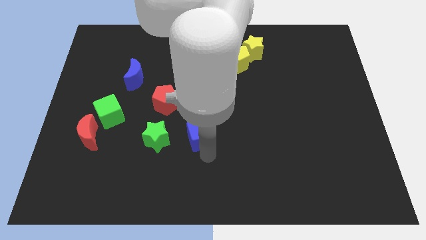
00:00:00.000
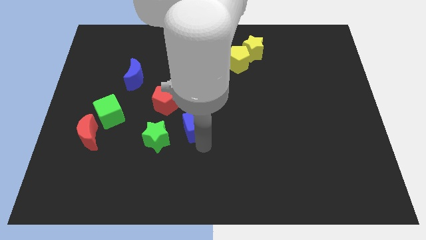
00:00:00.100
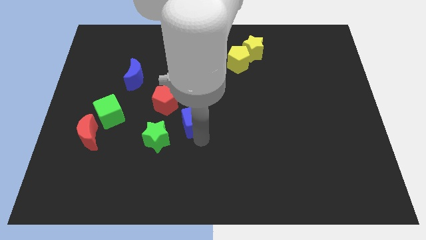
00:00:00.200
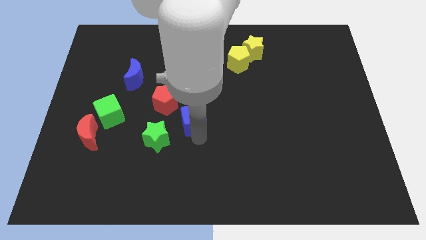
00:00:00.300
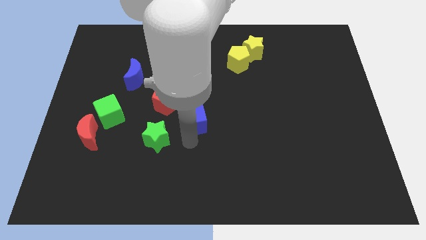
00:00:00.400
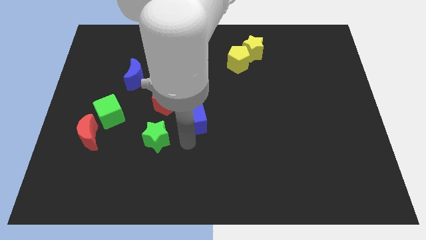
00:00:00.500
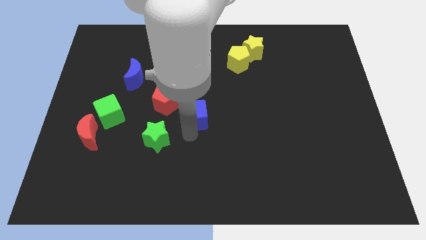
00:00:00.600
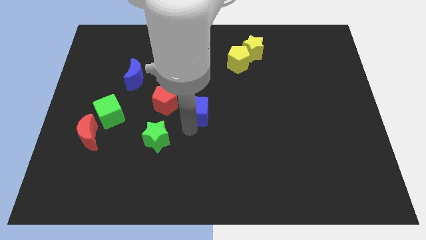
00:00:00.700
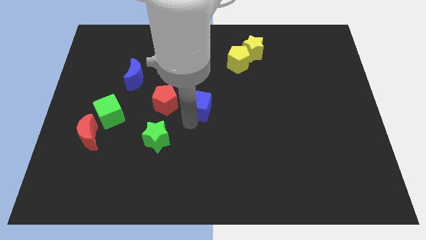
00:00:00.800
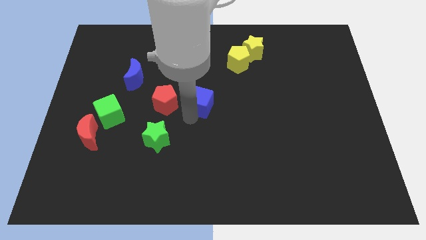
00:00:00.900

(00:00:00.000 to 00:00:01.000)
move the blue cube to the right of the red pentagon

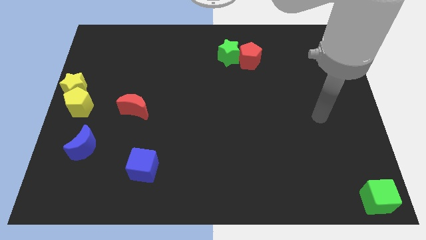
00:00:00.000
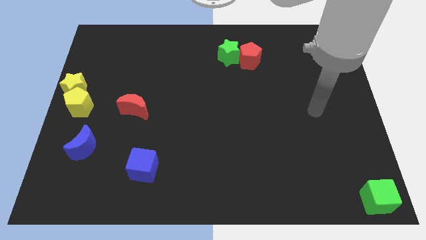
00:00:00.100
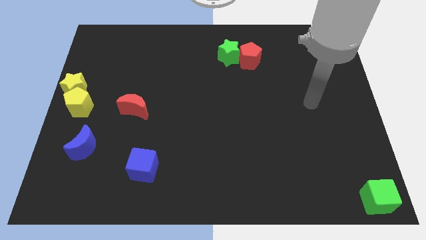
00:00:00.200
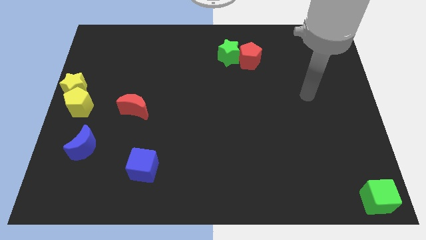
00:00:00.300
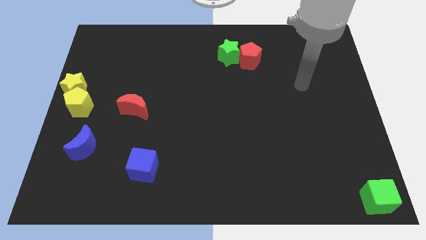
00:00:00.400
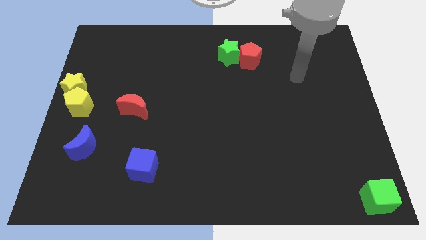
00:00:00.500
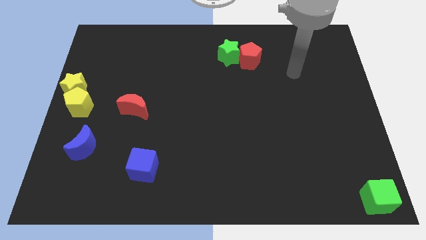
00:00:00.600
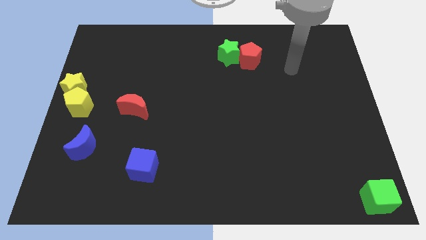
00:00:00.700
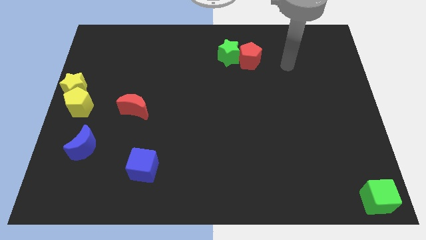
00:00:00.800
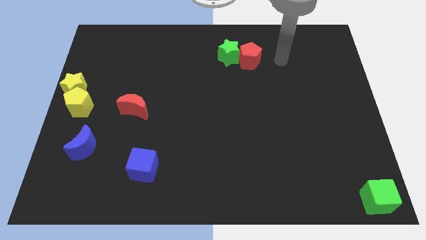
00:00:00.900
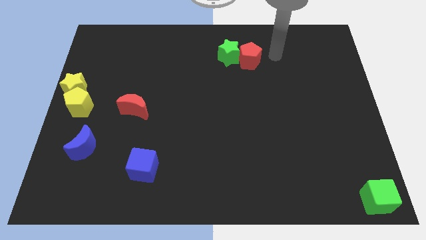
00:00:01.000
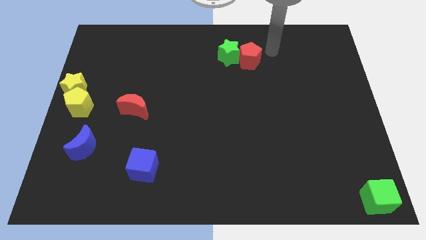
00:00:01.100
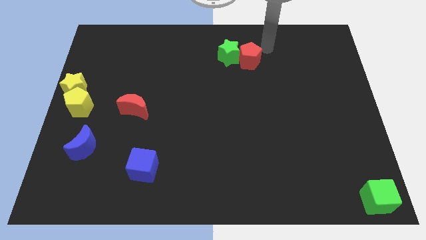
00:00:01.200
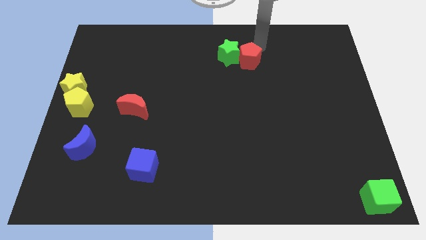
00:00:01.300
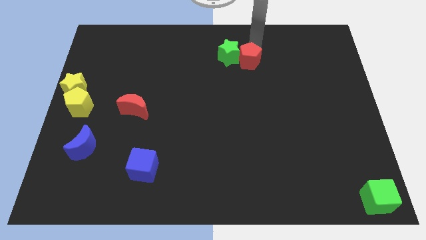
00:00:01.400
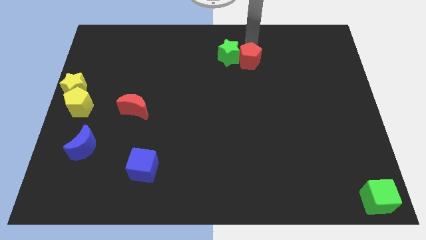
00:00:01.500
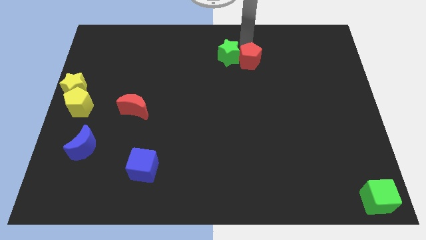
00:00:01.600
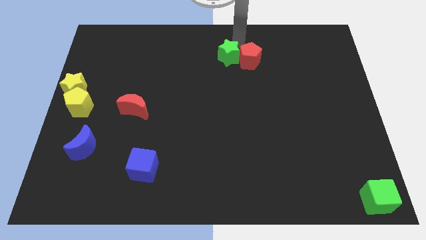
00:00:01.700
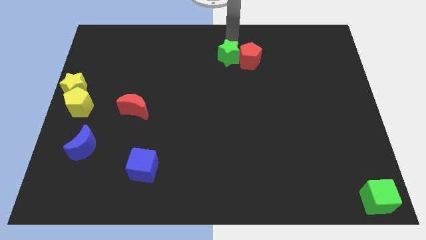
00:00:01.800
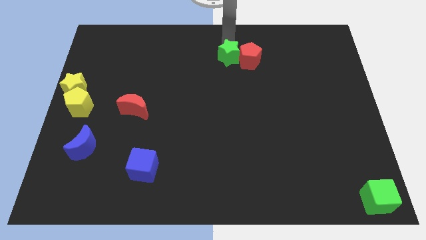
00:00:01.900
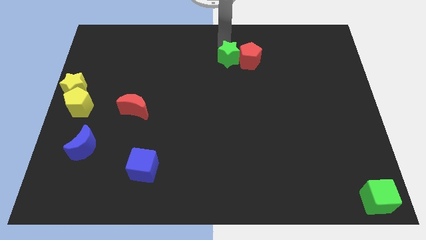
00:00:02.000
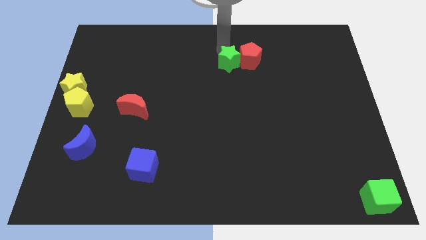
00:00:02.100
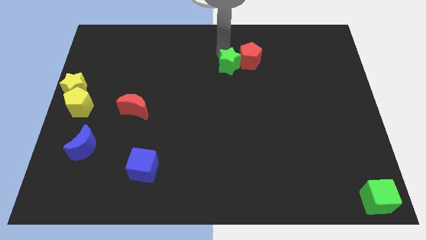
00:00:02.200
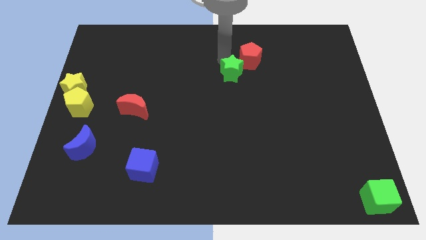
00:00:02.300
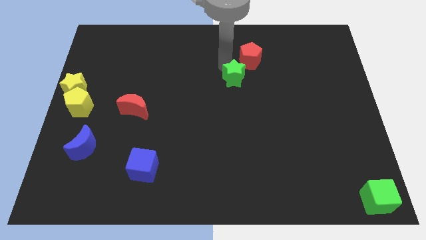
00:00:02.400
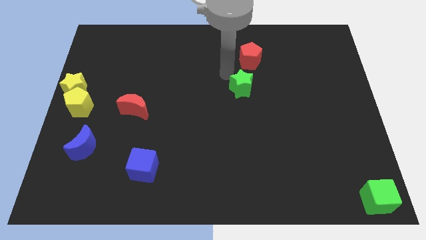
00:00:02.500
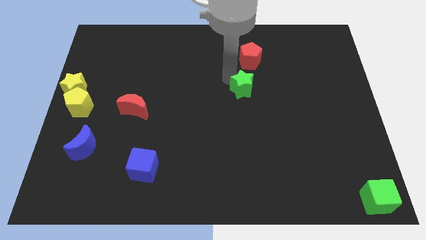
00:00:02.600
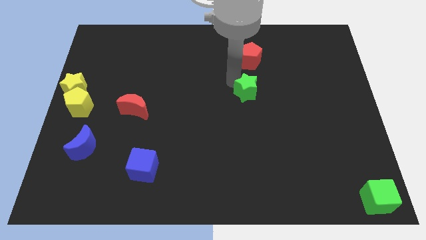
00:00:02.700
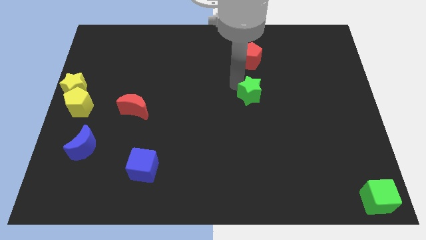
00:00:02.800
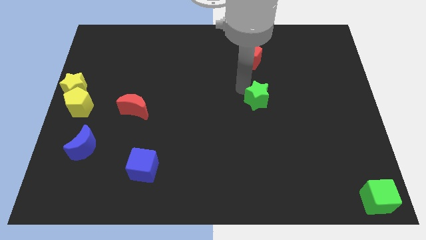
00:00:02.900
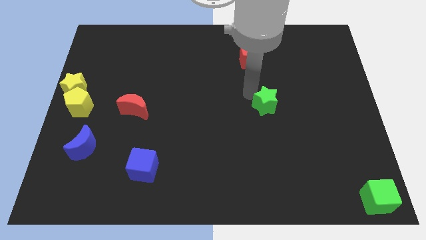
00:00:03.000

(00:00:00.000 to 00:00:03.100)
separate the green star from the red pentagon

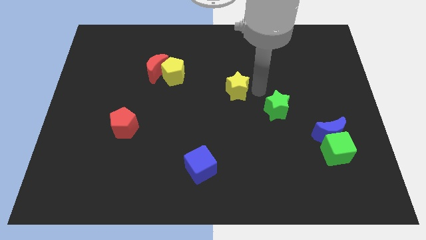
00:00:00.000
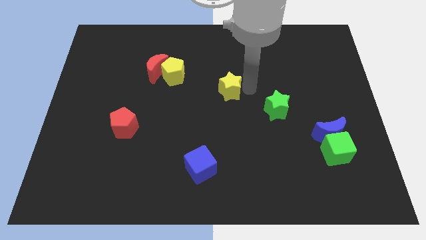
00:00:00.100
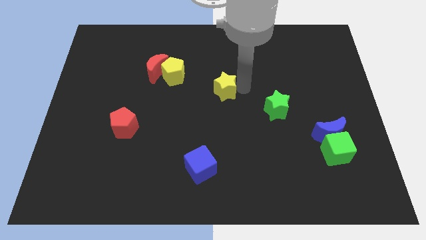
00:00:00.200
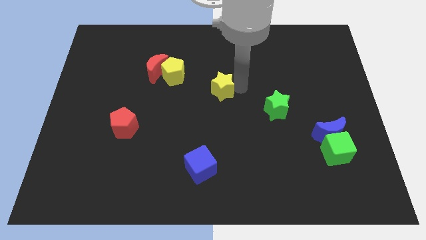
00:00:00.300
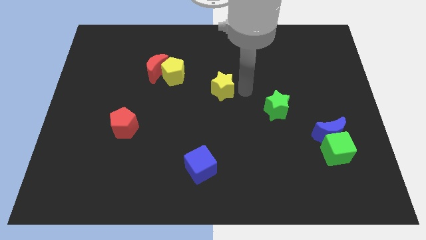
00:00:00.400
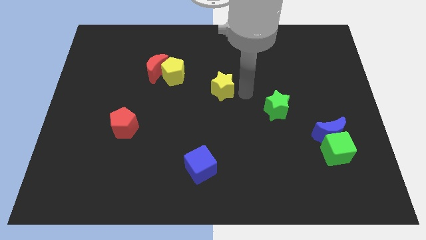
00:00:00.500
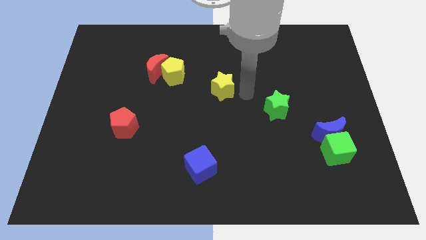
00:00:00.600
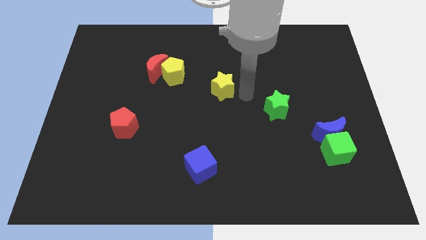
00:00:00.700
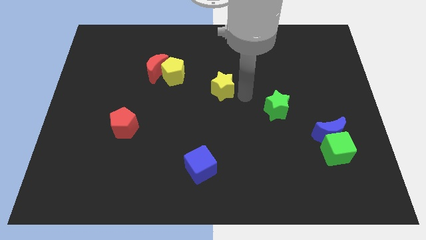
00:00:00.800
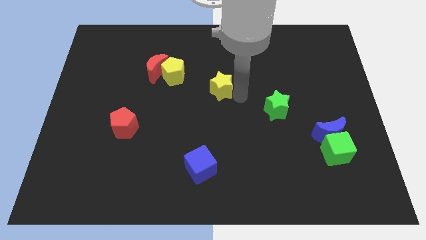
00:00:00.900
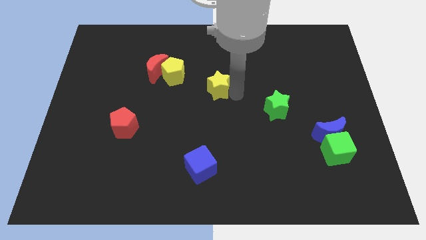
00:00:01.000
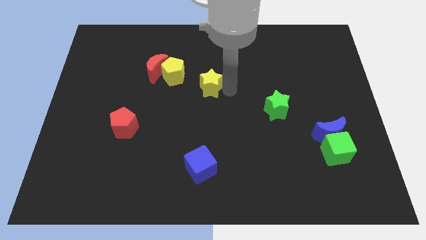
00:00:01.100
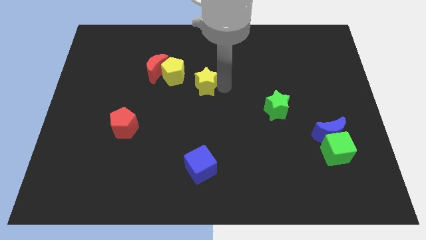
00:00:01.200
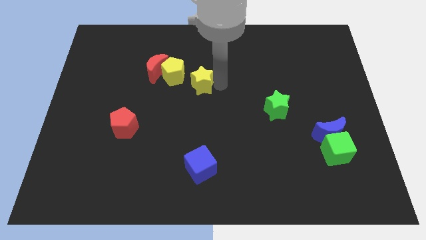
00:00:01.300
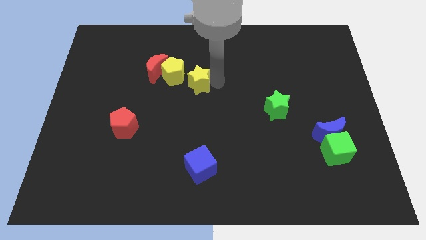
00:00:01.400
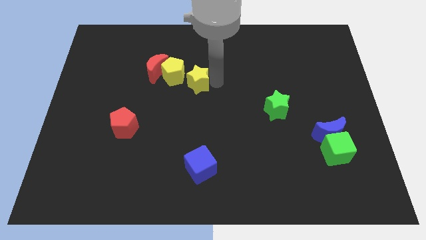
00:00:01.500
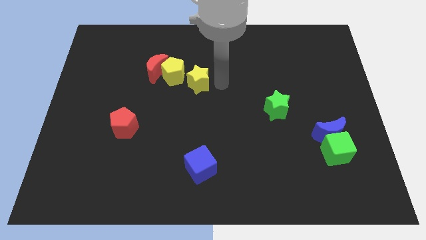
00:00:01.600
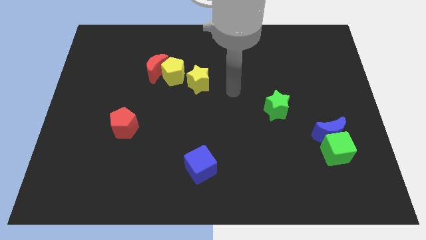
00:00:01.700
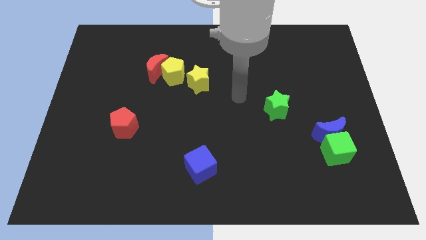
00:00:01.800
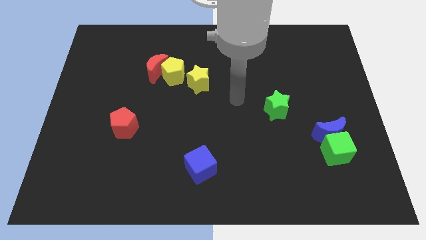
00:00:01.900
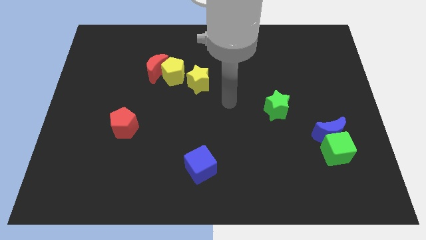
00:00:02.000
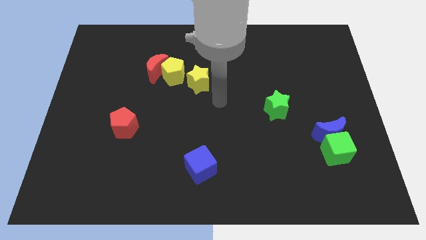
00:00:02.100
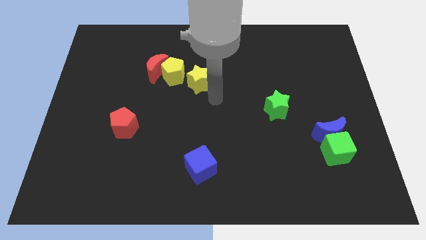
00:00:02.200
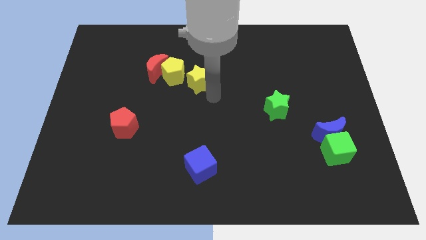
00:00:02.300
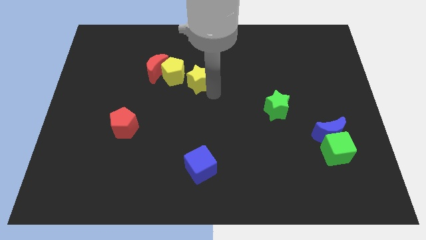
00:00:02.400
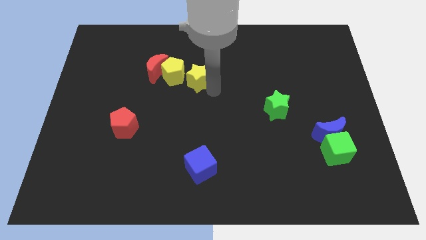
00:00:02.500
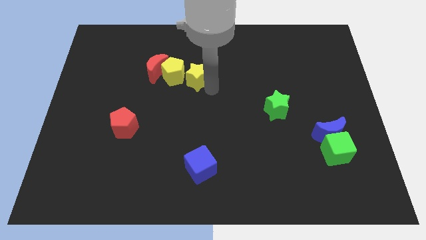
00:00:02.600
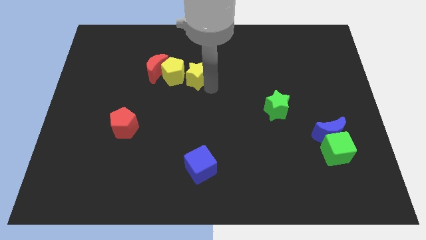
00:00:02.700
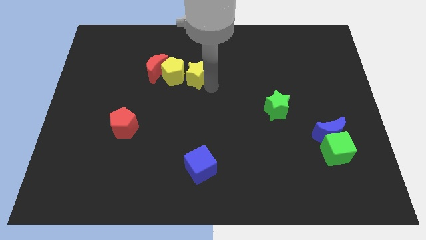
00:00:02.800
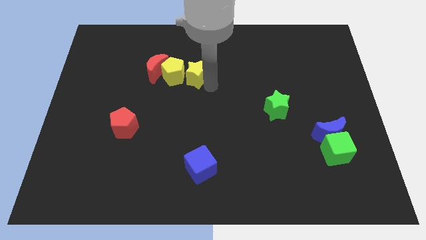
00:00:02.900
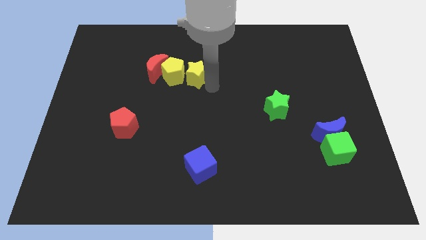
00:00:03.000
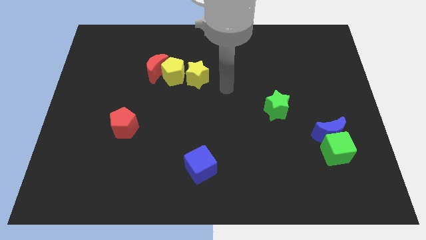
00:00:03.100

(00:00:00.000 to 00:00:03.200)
push the yellow star right of the yellow pentagon

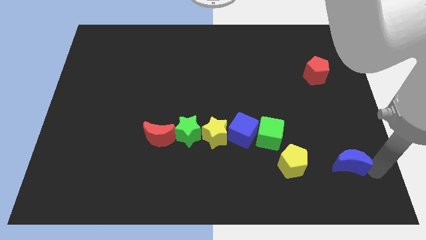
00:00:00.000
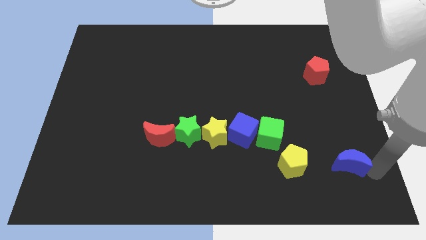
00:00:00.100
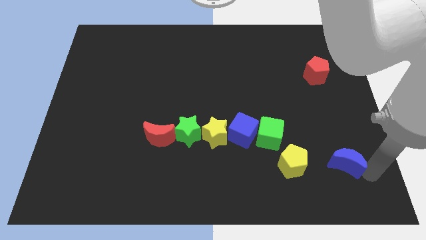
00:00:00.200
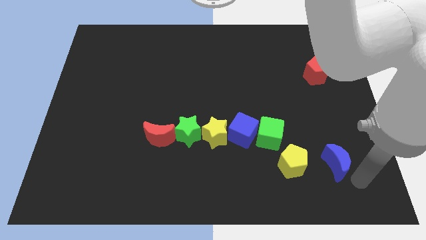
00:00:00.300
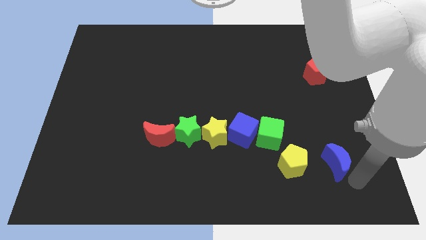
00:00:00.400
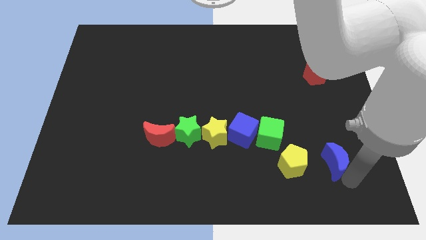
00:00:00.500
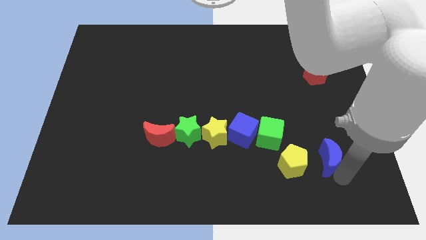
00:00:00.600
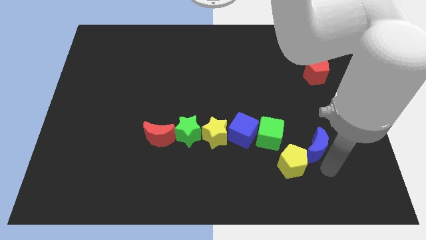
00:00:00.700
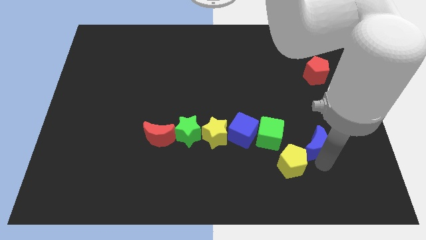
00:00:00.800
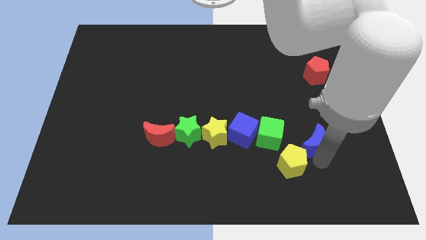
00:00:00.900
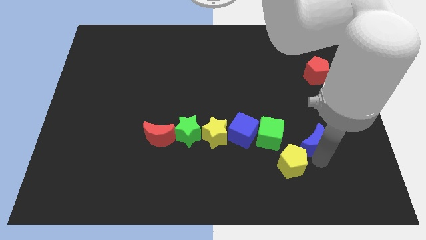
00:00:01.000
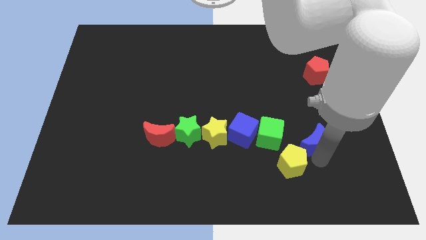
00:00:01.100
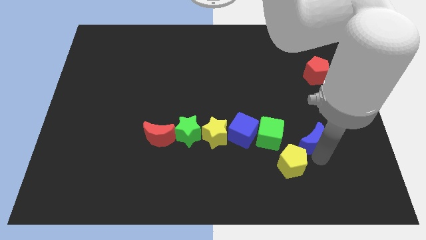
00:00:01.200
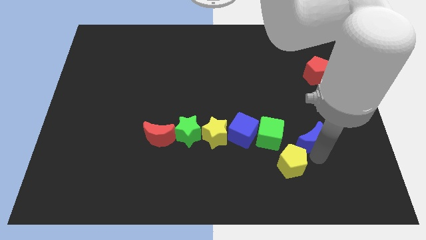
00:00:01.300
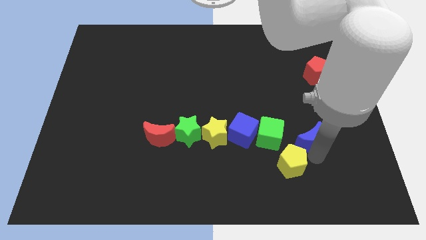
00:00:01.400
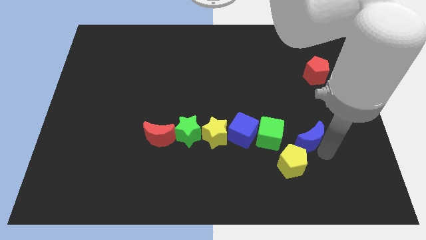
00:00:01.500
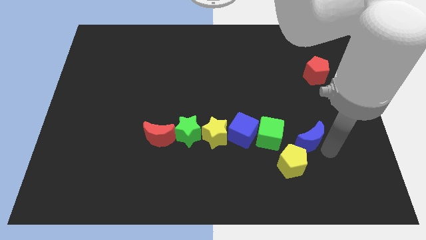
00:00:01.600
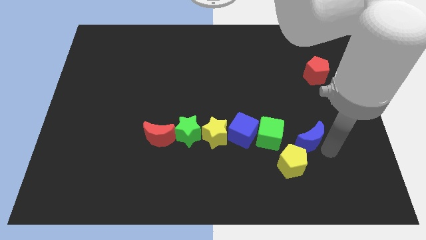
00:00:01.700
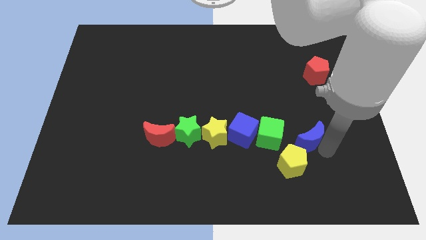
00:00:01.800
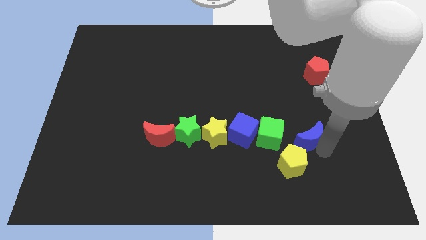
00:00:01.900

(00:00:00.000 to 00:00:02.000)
move the blue moon on the top right side of the yellow pentagon
